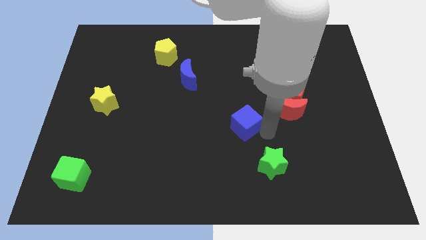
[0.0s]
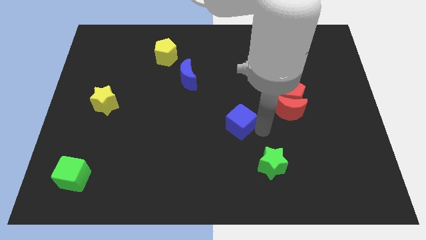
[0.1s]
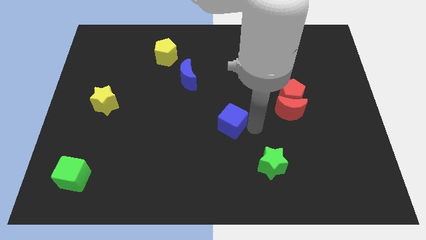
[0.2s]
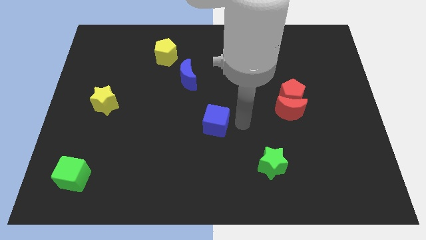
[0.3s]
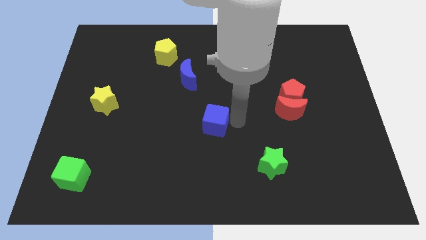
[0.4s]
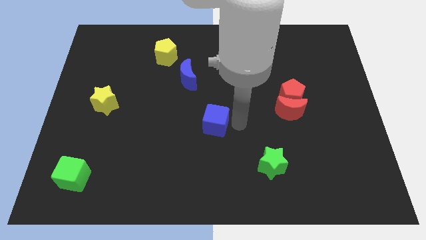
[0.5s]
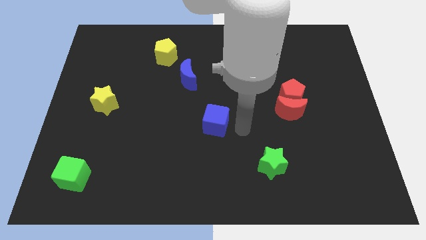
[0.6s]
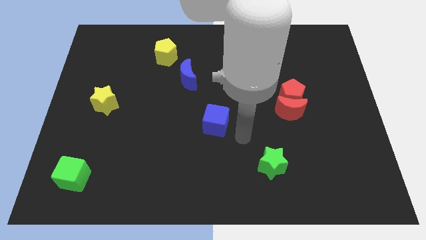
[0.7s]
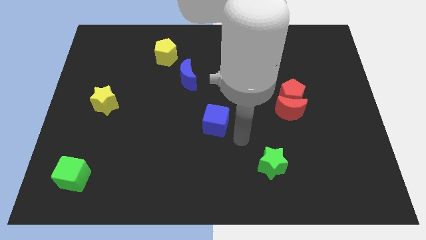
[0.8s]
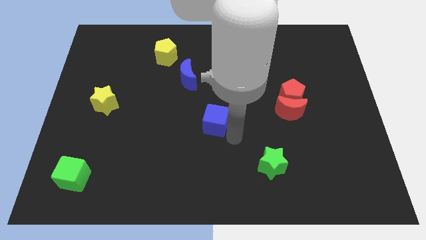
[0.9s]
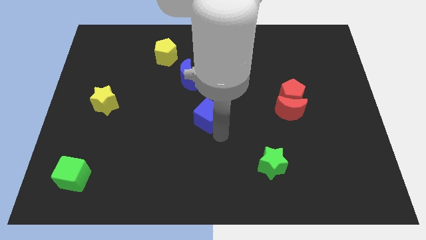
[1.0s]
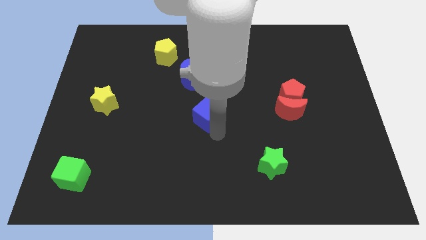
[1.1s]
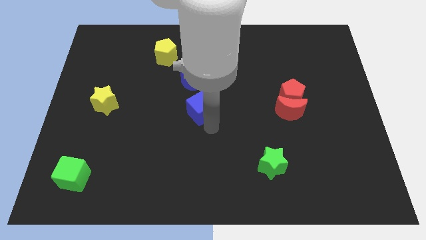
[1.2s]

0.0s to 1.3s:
place the blue cube to the center of the board

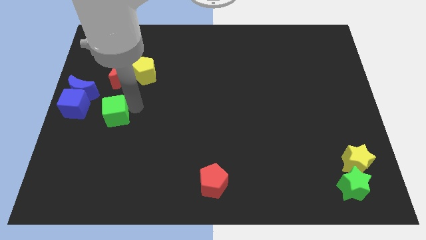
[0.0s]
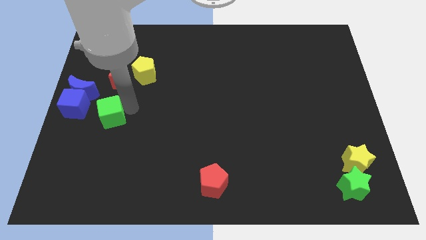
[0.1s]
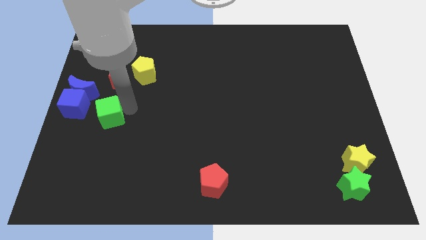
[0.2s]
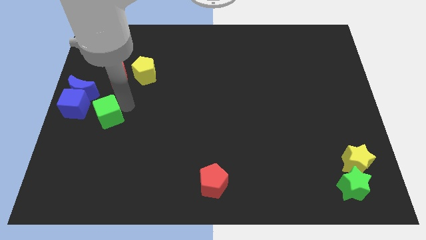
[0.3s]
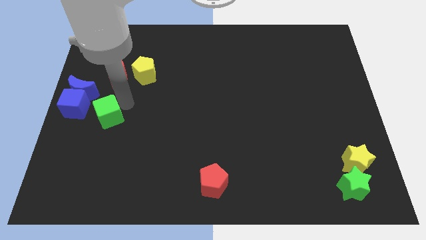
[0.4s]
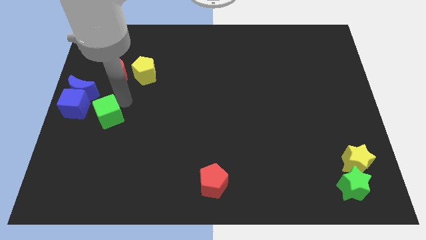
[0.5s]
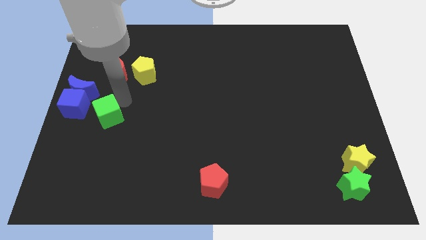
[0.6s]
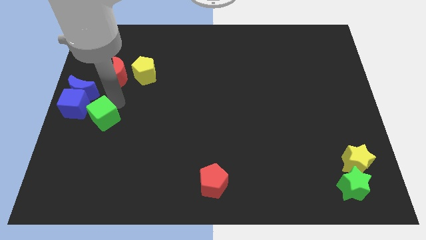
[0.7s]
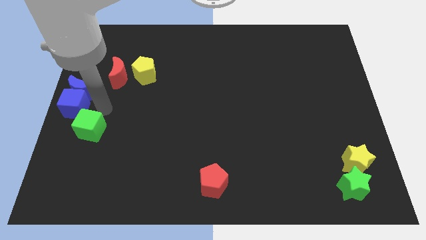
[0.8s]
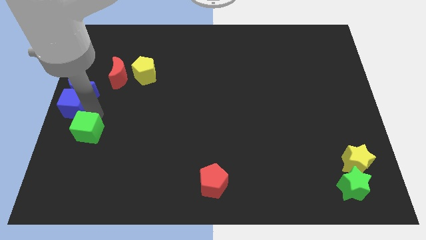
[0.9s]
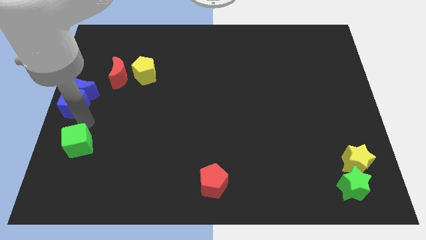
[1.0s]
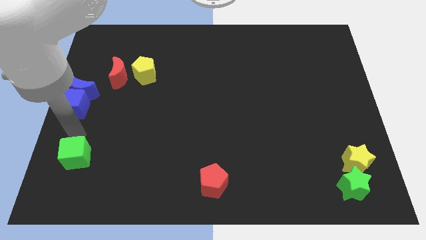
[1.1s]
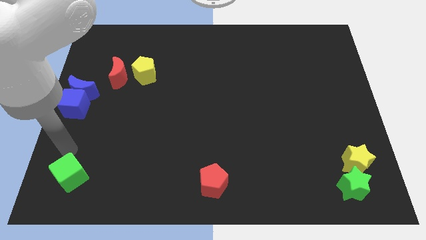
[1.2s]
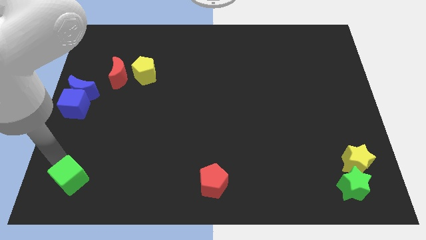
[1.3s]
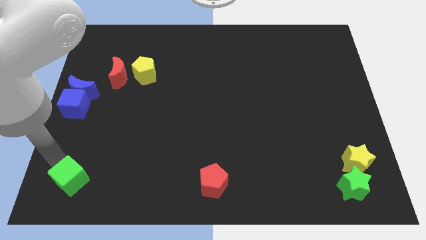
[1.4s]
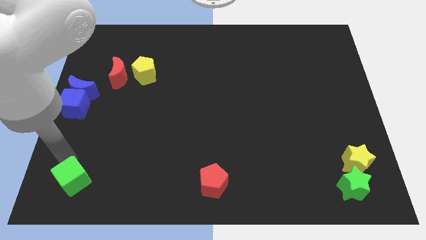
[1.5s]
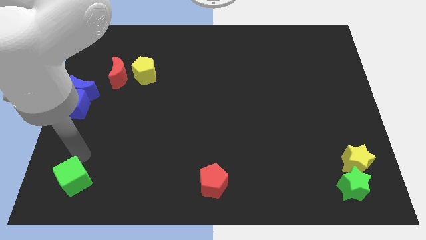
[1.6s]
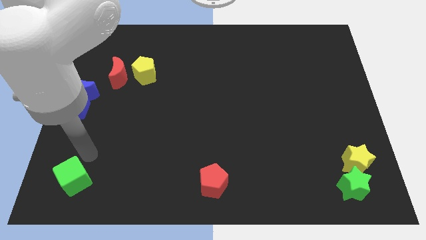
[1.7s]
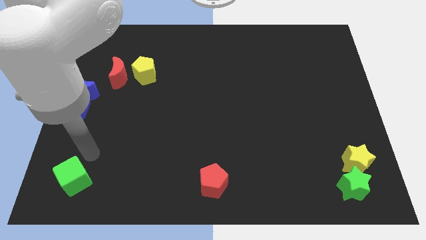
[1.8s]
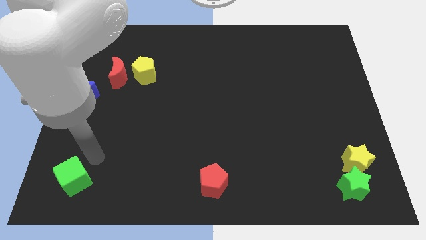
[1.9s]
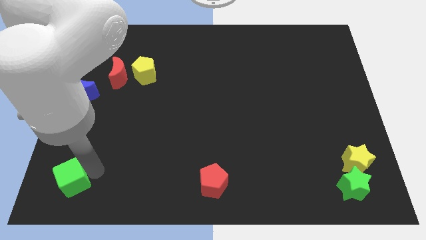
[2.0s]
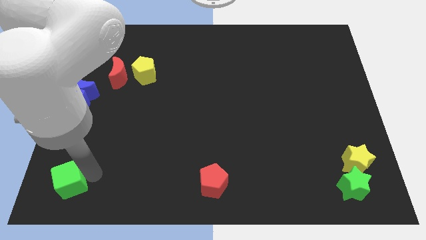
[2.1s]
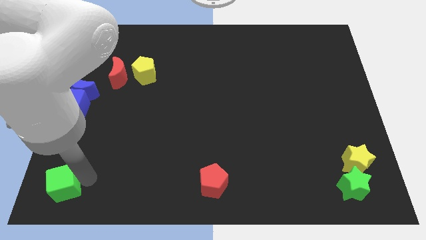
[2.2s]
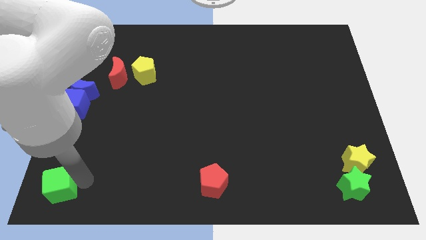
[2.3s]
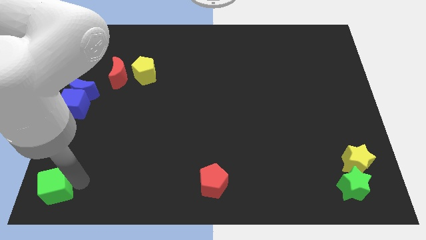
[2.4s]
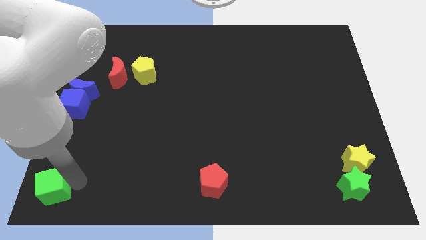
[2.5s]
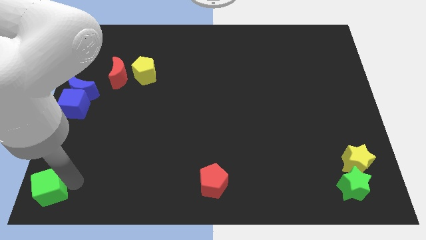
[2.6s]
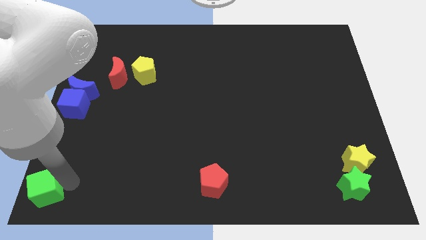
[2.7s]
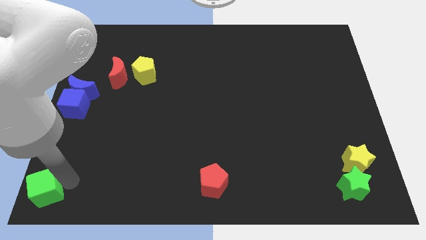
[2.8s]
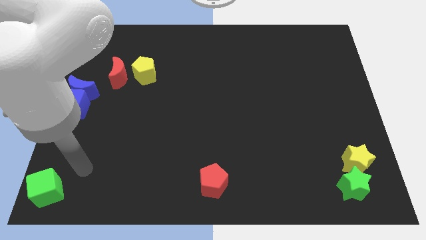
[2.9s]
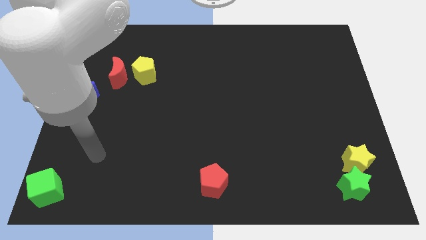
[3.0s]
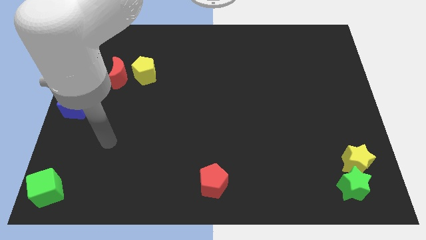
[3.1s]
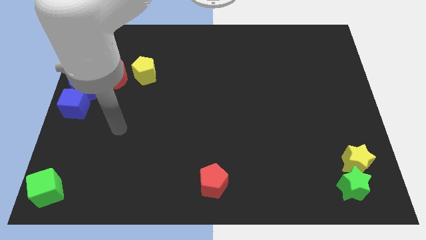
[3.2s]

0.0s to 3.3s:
move the green cube towards the bottom left corner

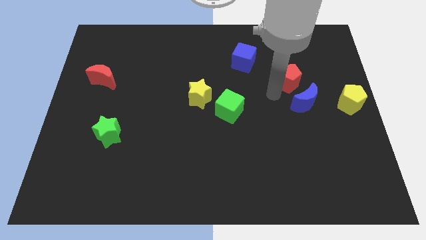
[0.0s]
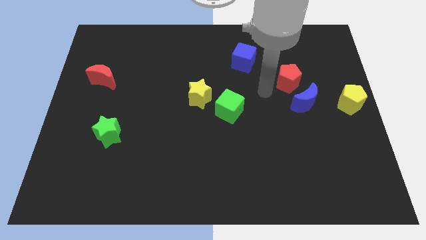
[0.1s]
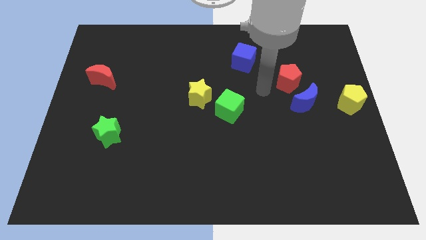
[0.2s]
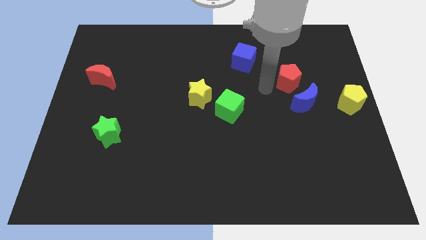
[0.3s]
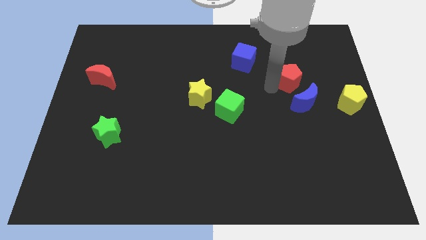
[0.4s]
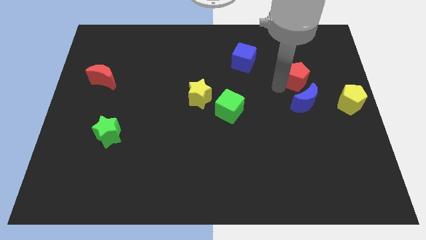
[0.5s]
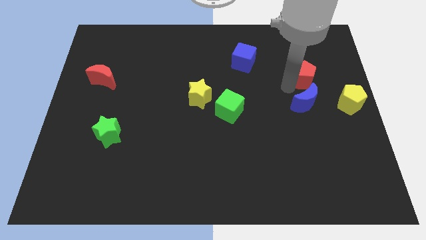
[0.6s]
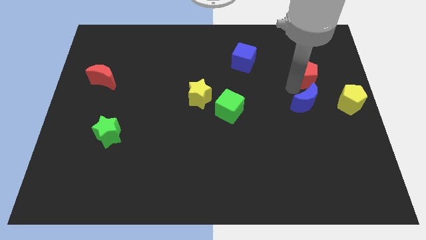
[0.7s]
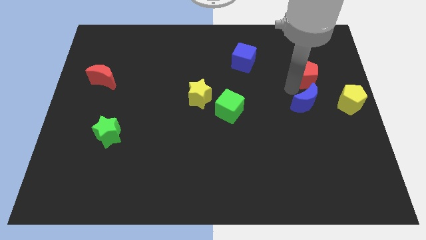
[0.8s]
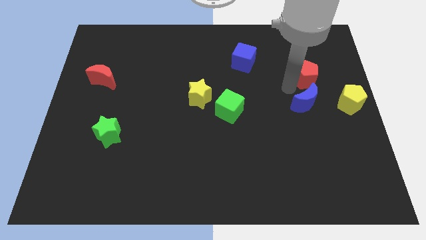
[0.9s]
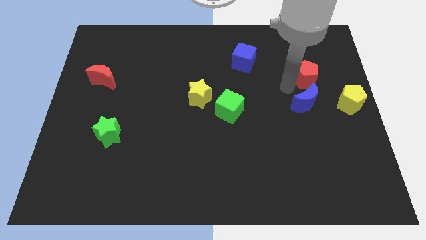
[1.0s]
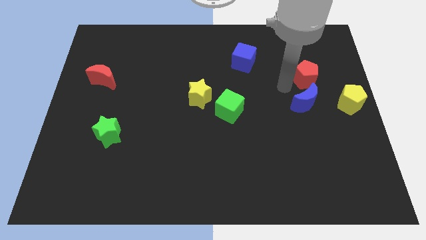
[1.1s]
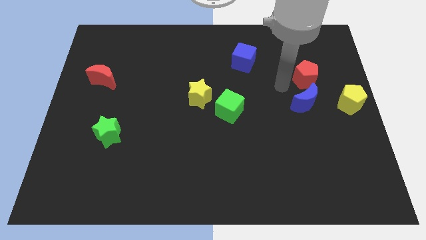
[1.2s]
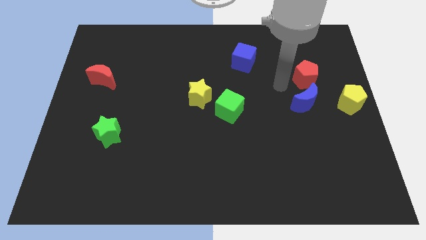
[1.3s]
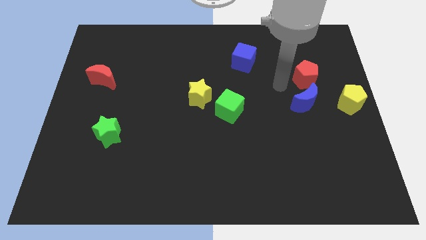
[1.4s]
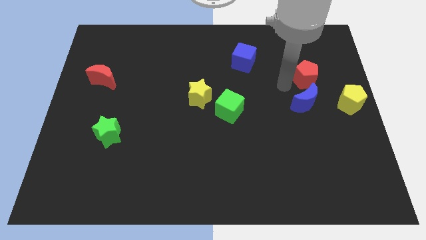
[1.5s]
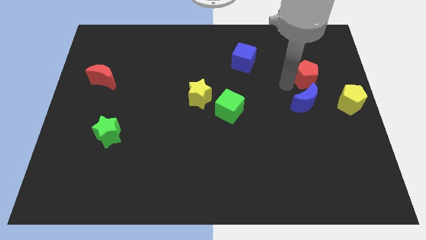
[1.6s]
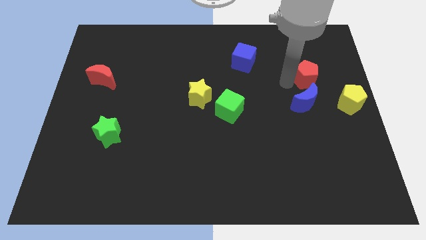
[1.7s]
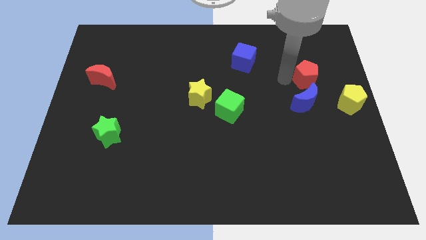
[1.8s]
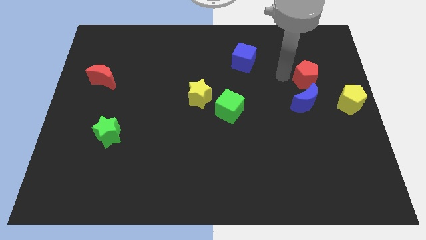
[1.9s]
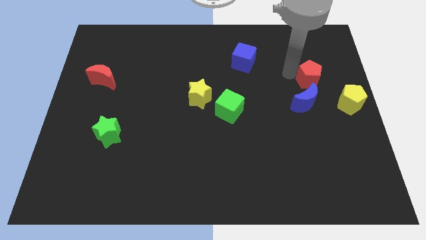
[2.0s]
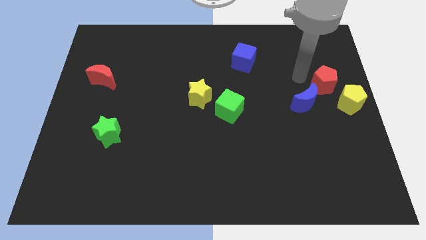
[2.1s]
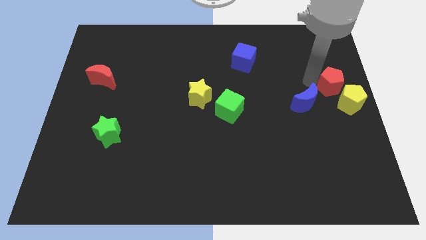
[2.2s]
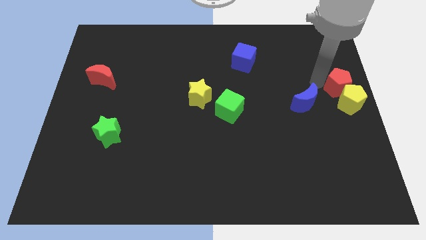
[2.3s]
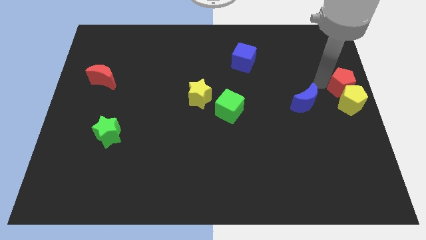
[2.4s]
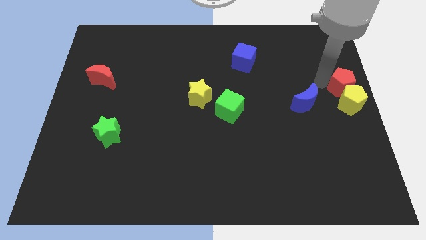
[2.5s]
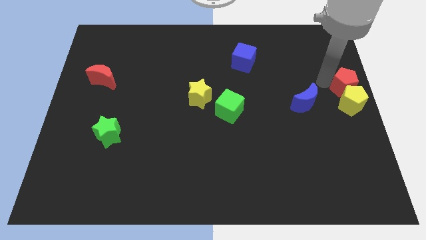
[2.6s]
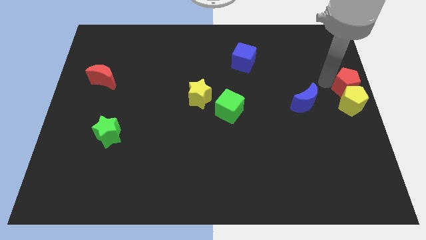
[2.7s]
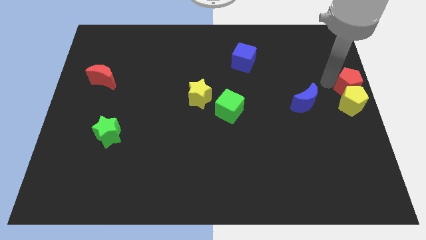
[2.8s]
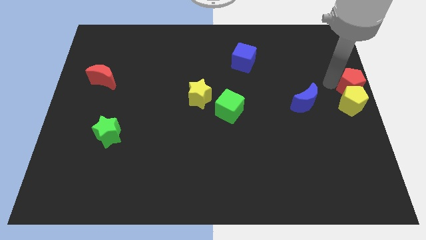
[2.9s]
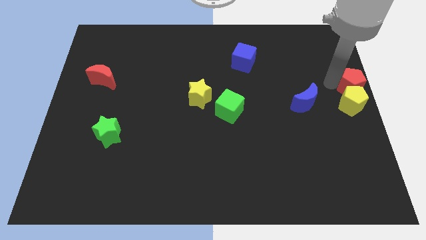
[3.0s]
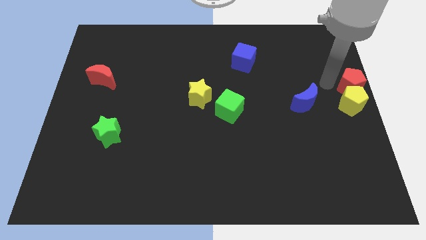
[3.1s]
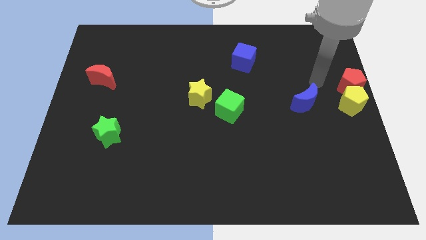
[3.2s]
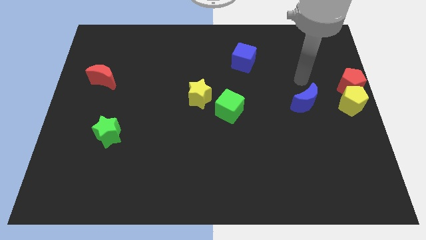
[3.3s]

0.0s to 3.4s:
push red pentagon above yellow pentagon

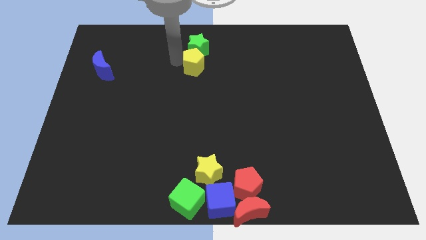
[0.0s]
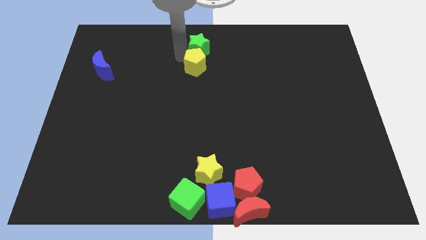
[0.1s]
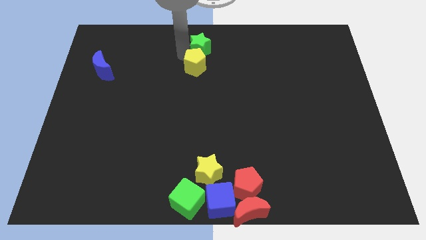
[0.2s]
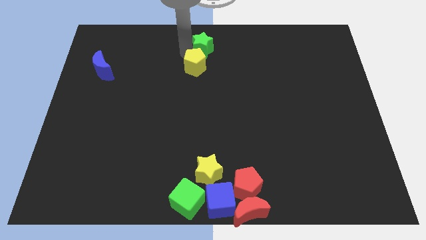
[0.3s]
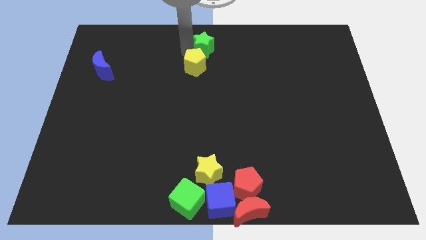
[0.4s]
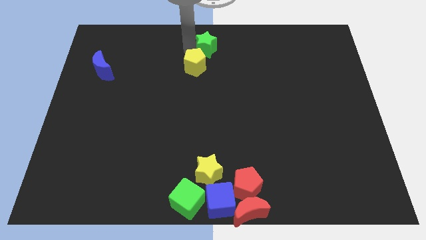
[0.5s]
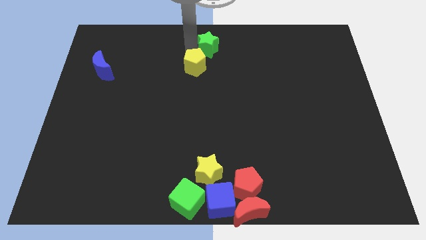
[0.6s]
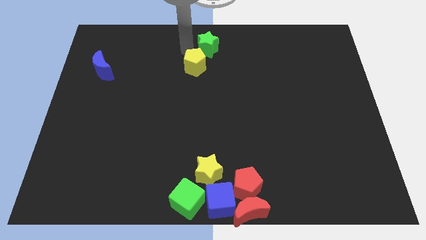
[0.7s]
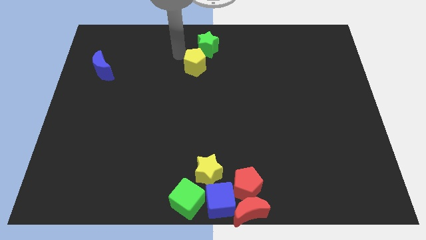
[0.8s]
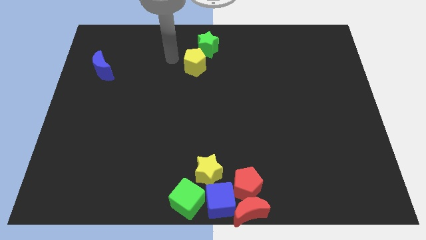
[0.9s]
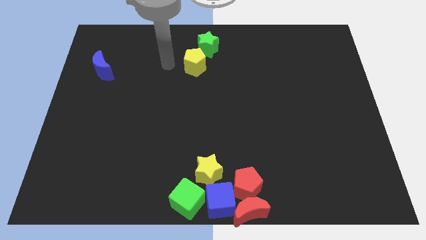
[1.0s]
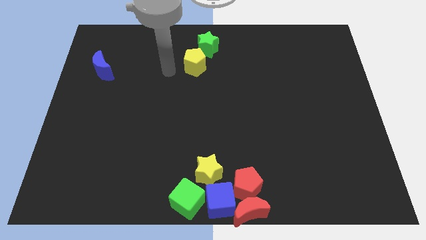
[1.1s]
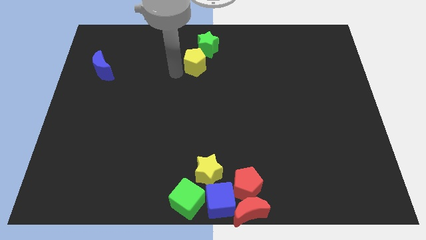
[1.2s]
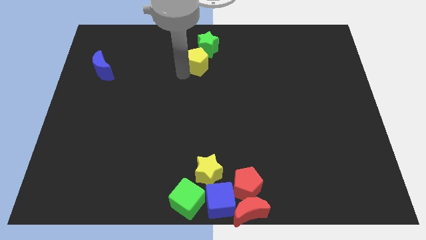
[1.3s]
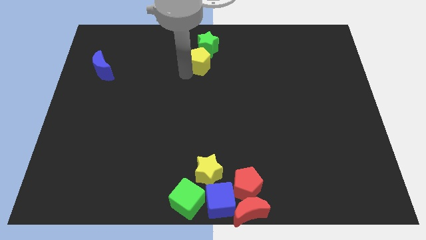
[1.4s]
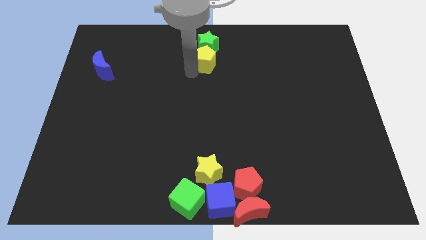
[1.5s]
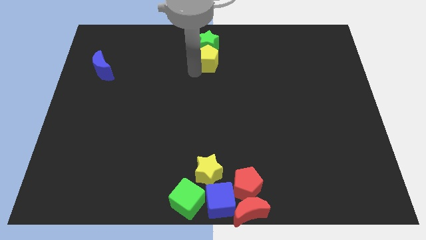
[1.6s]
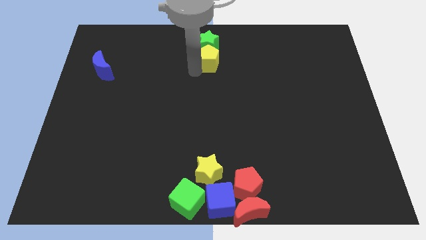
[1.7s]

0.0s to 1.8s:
place yellow pentagon vertically above yellow star
